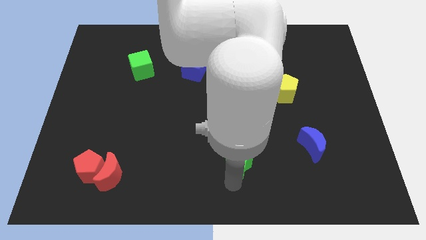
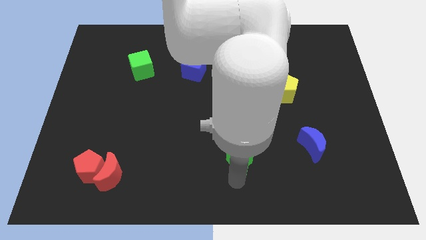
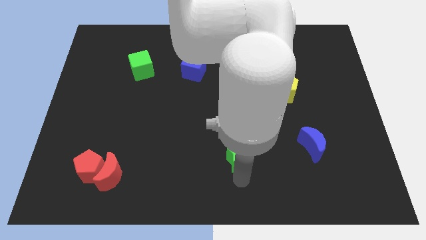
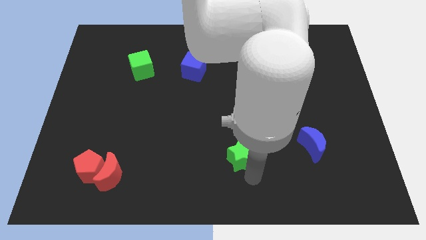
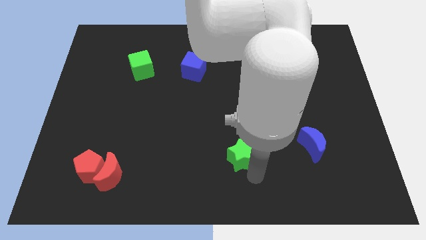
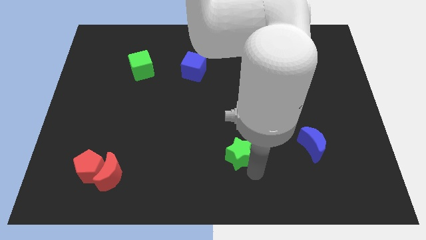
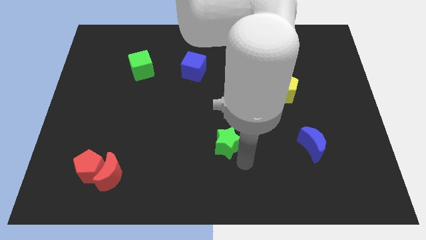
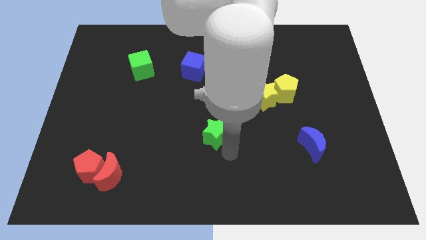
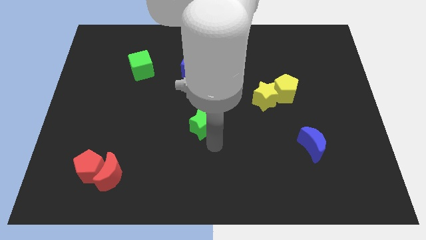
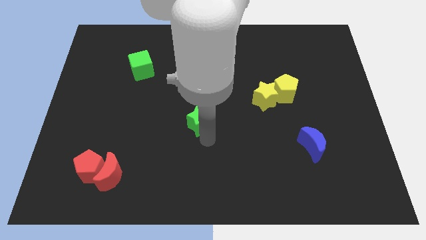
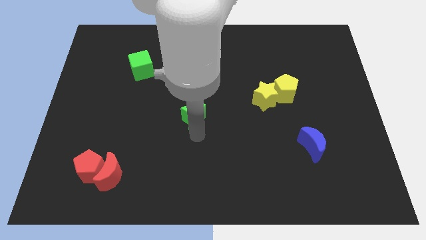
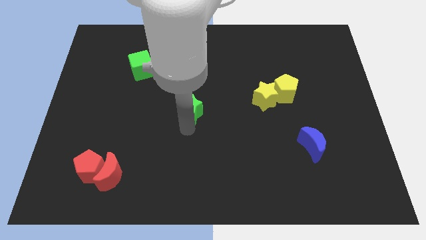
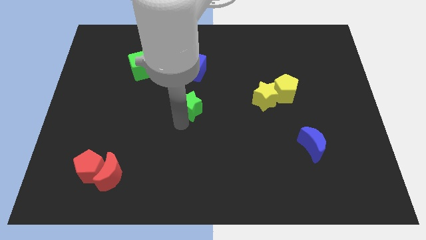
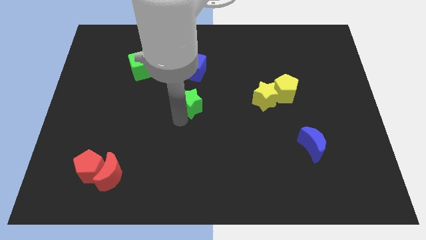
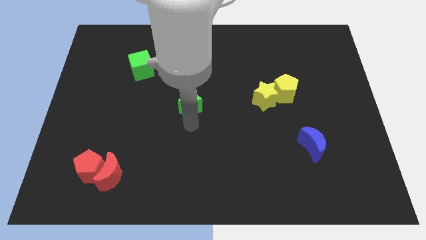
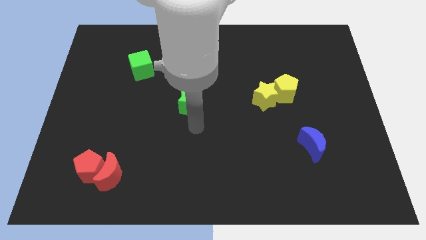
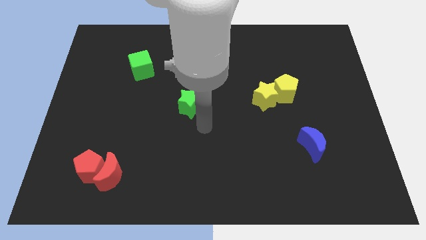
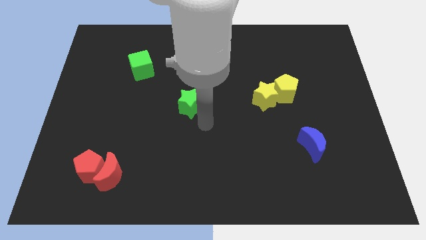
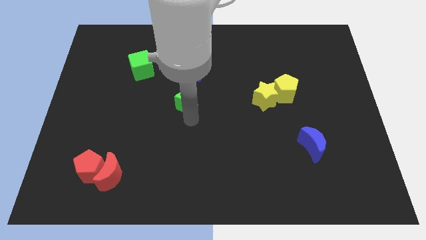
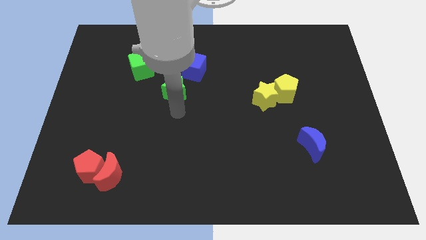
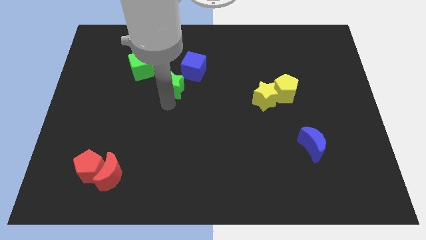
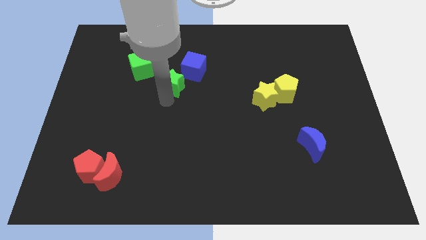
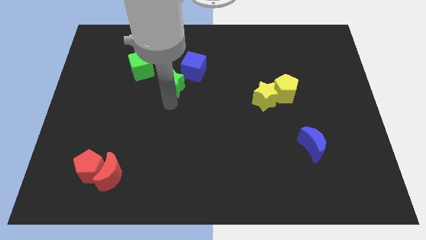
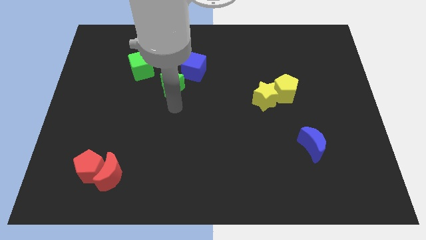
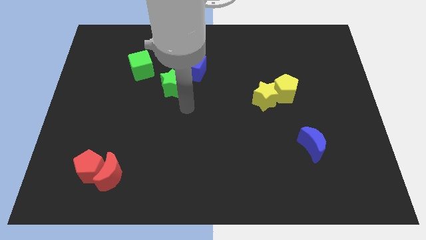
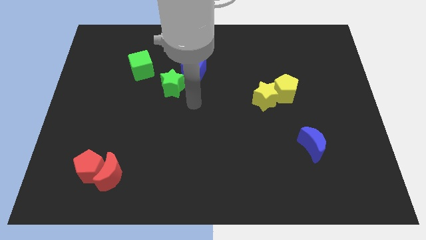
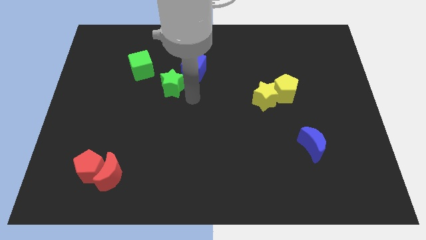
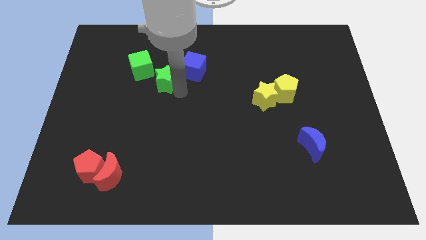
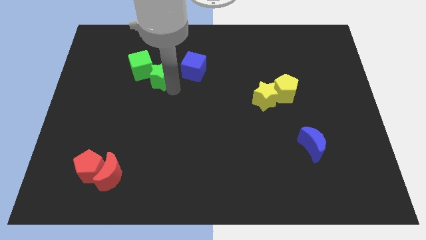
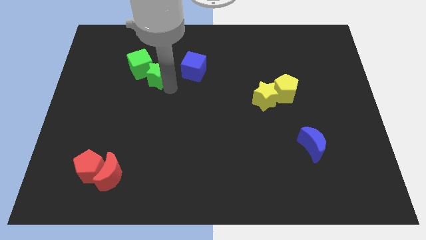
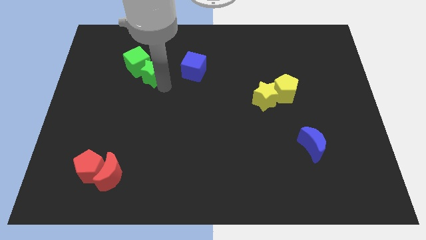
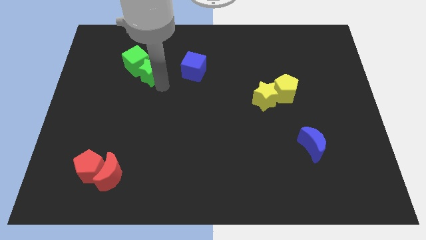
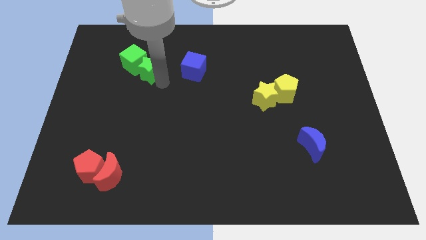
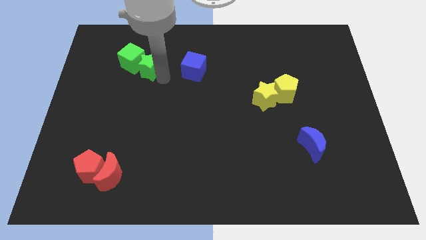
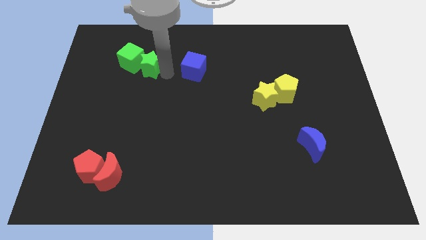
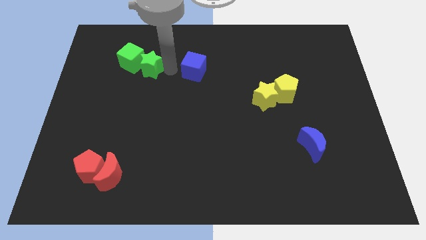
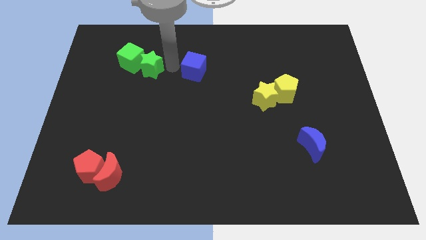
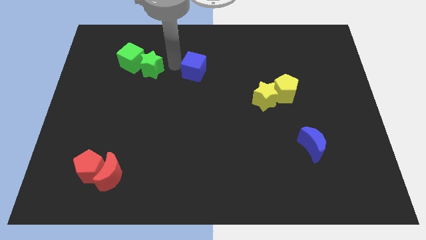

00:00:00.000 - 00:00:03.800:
push the green star into the green cube

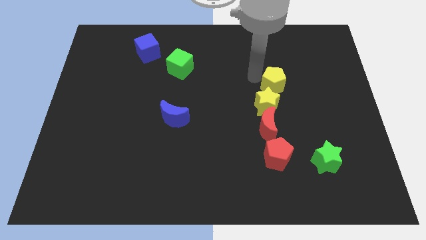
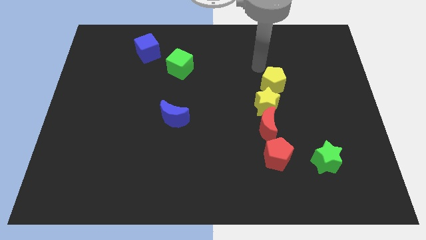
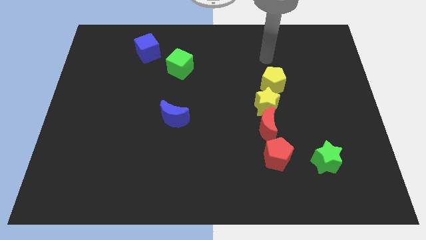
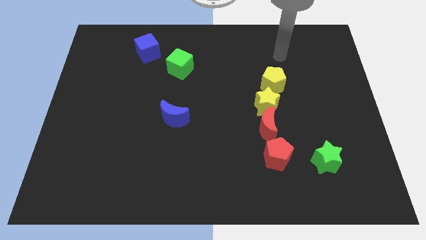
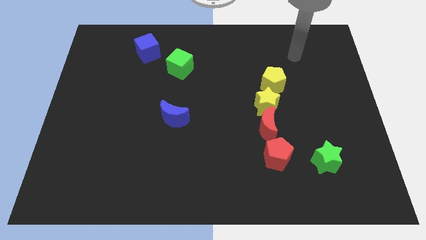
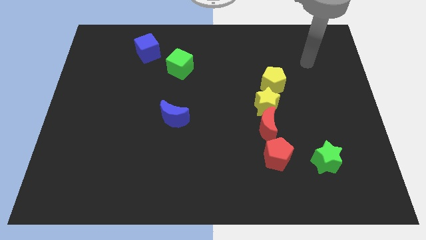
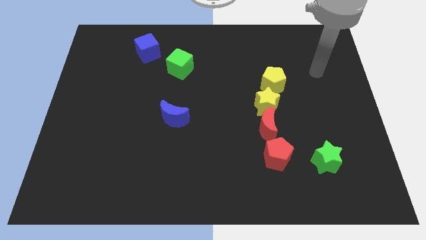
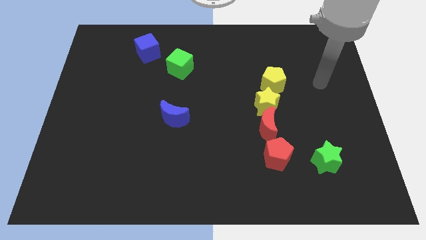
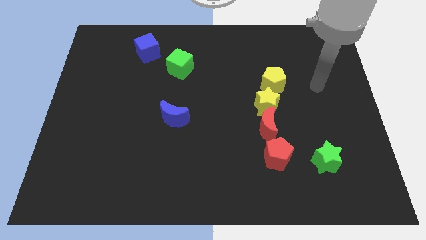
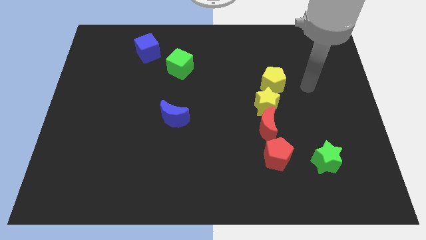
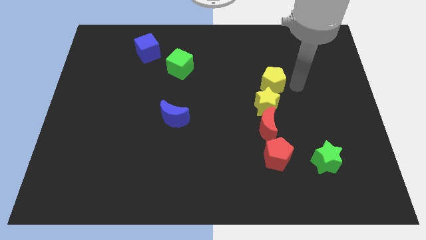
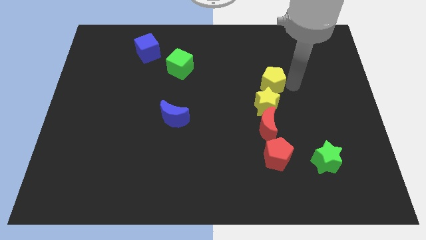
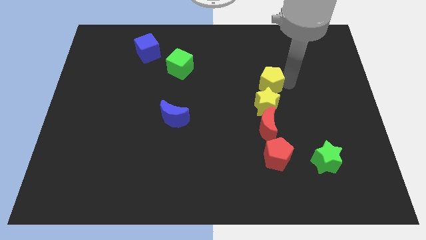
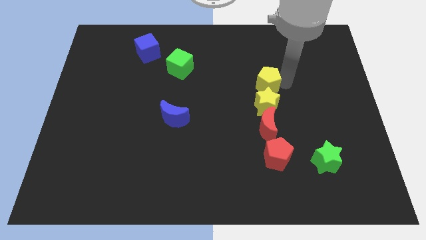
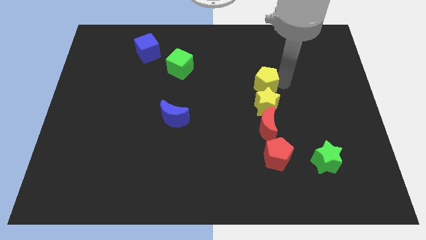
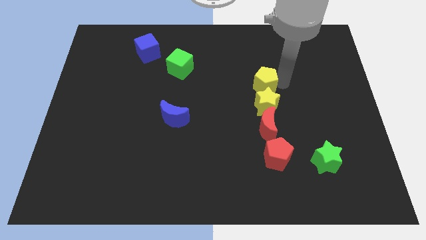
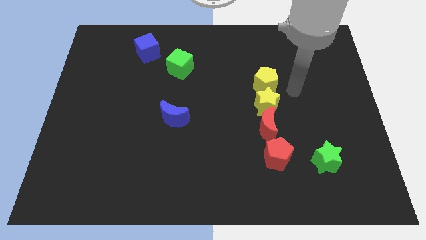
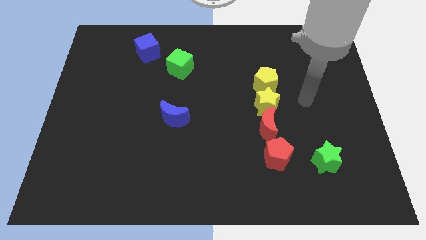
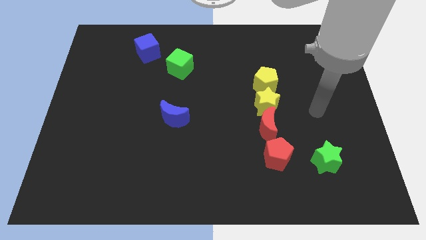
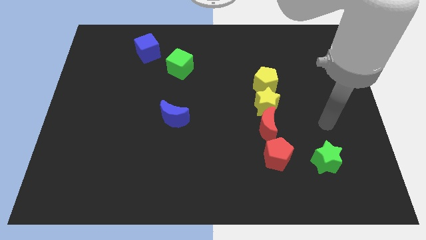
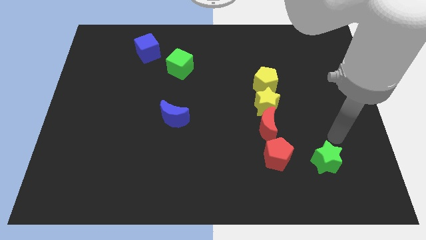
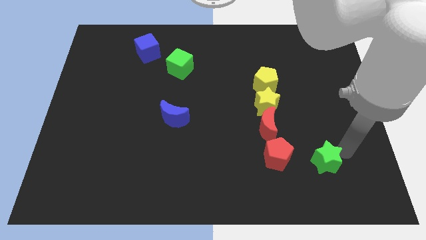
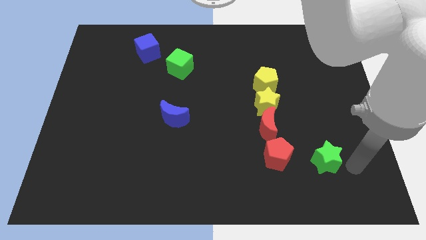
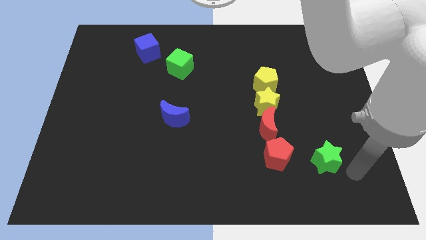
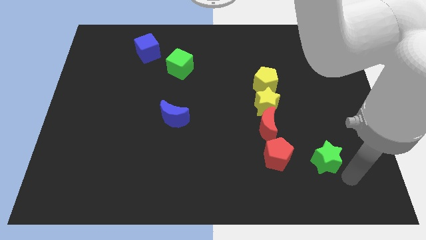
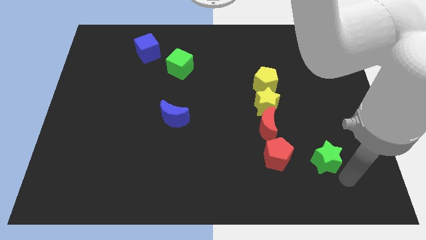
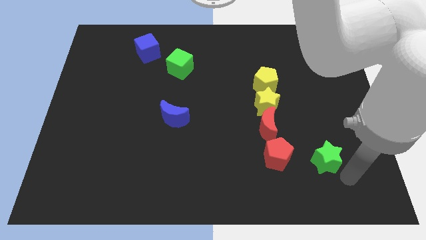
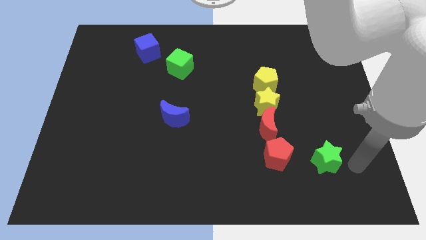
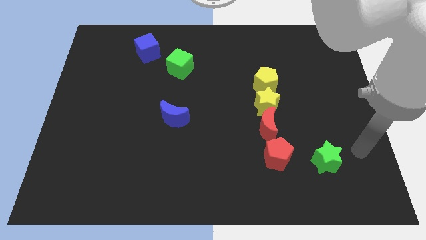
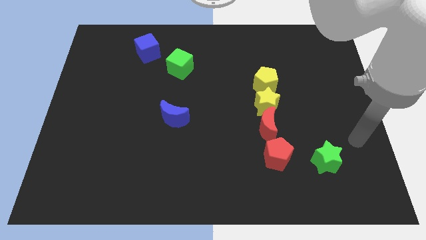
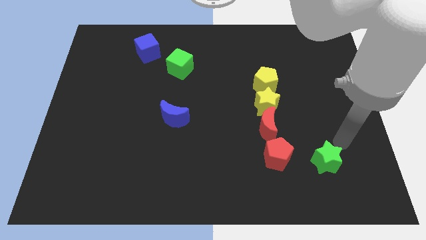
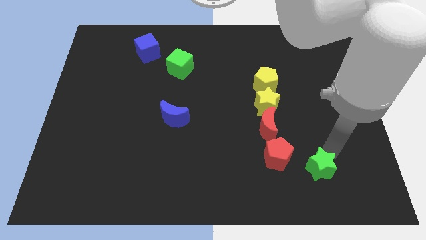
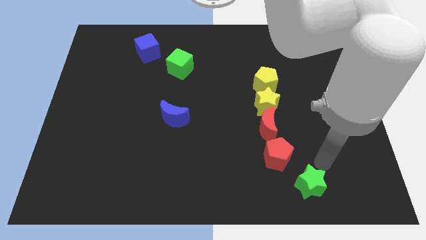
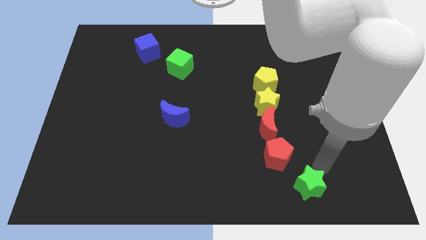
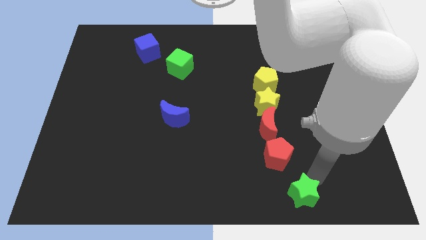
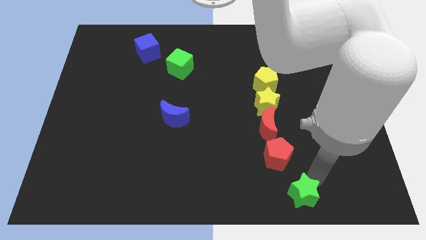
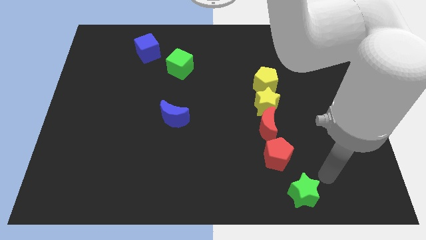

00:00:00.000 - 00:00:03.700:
place the green star diagonally bottom right to the red pentagon

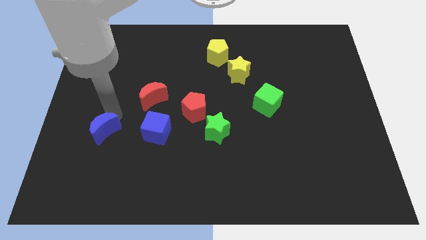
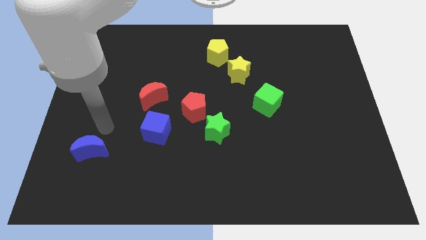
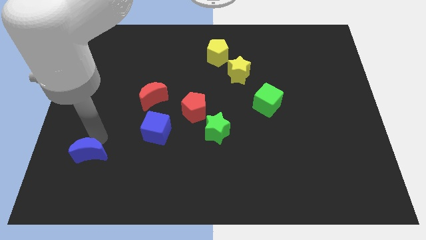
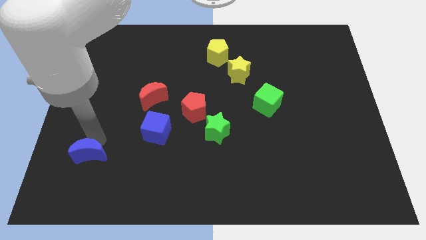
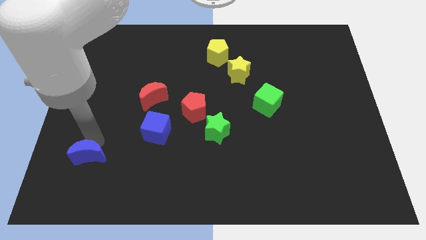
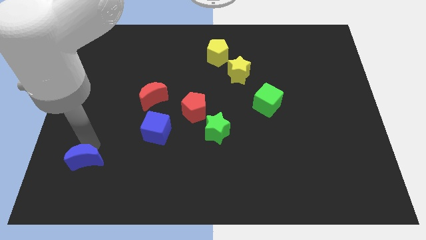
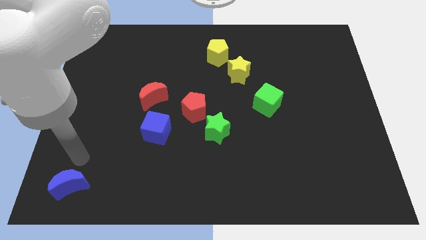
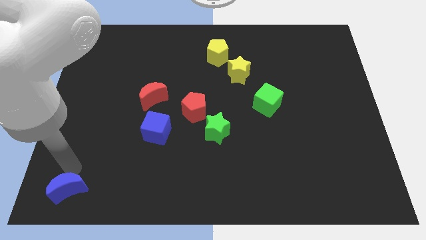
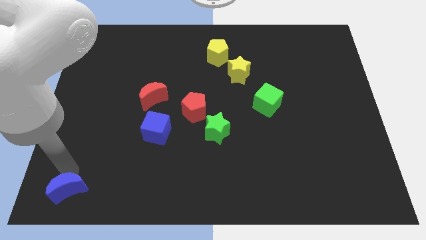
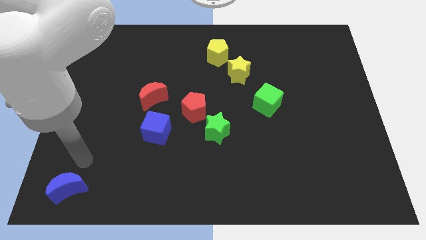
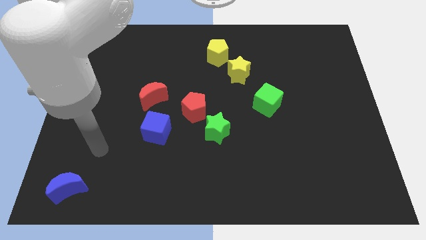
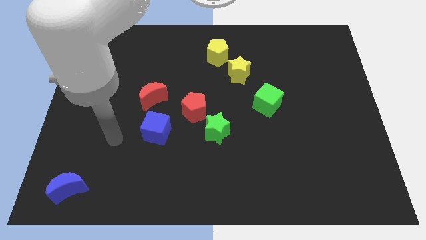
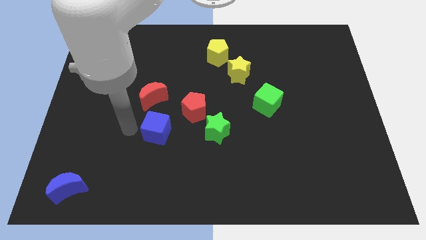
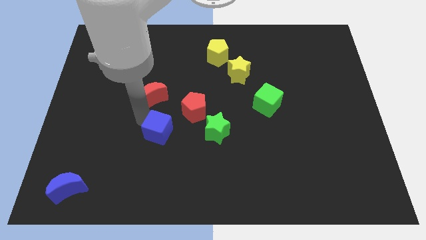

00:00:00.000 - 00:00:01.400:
put the blue crescent to the bottom left corner of the board

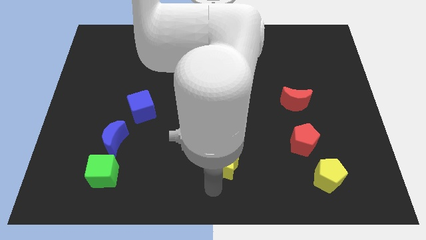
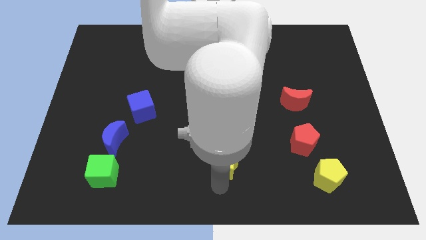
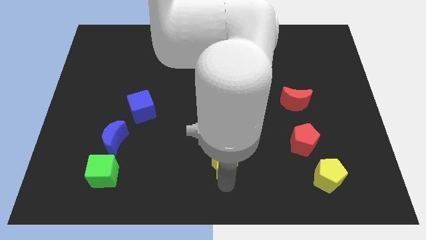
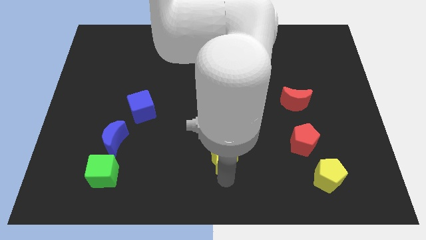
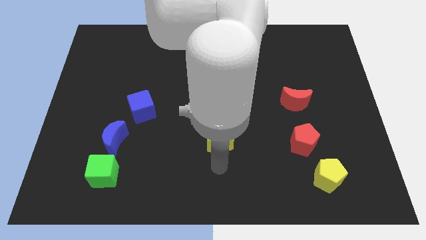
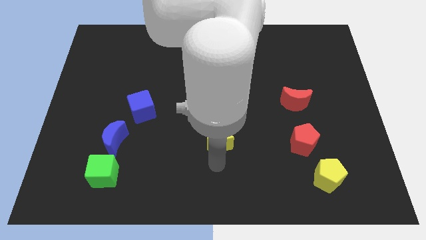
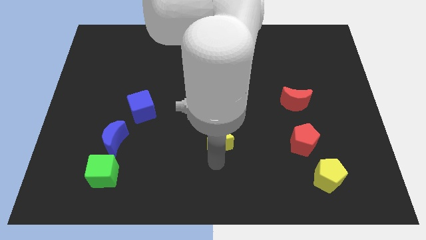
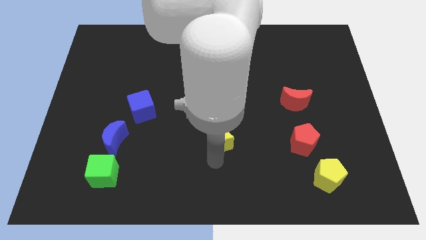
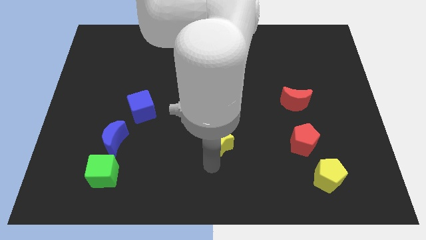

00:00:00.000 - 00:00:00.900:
push yellow star slightly upward
